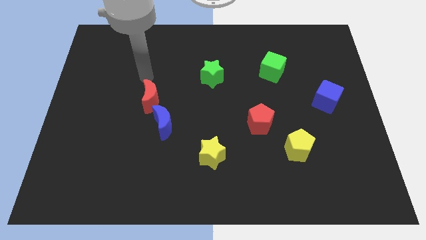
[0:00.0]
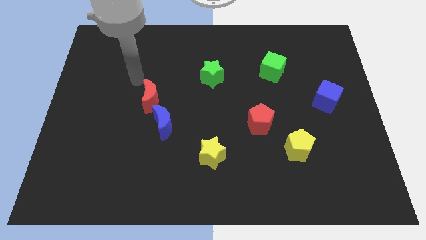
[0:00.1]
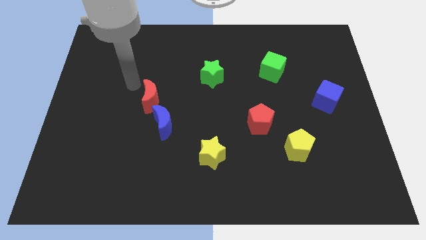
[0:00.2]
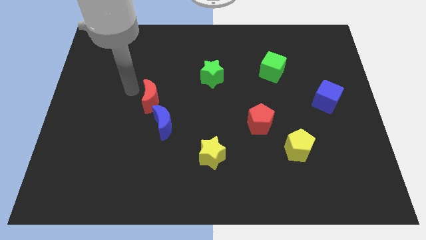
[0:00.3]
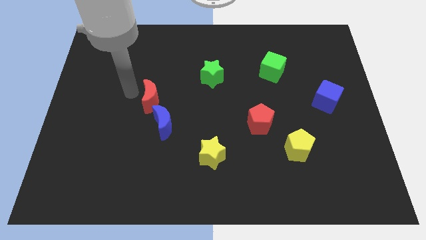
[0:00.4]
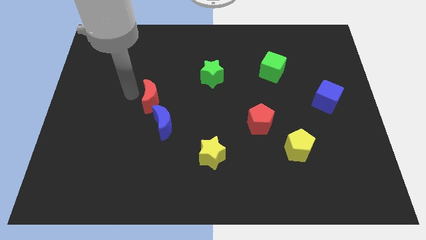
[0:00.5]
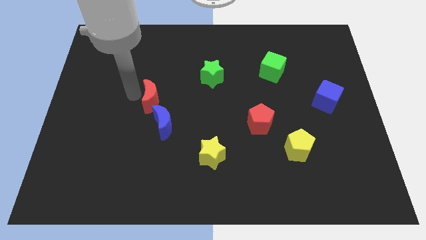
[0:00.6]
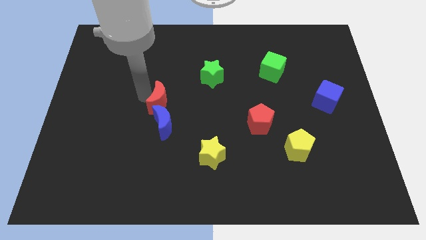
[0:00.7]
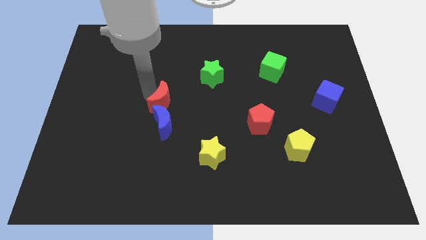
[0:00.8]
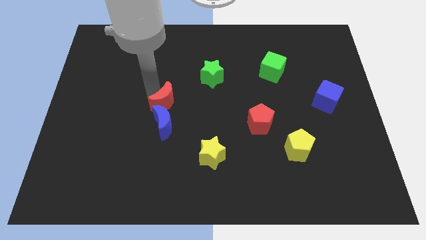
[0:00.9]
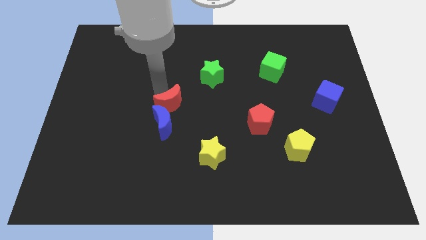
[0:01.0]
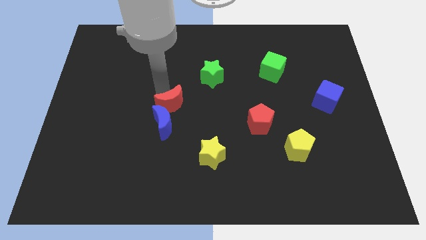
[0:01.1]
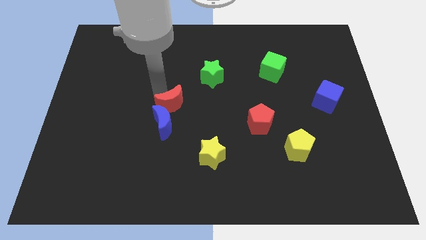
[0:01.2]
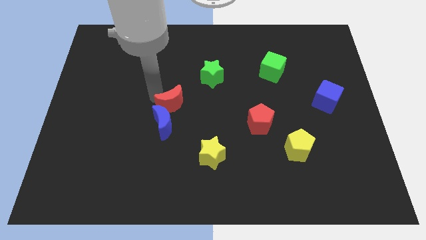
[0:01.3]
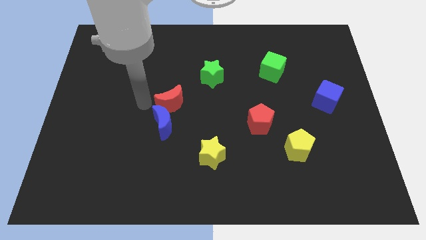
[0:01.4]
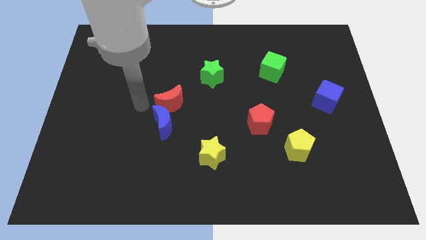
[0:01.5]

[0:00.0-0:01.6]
move the red moon slightly to the right

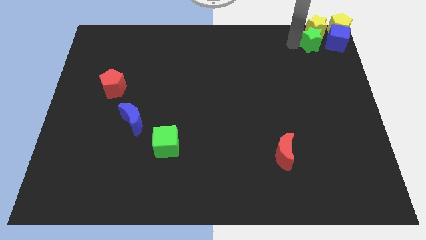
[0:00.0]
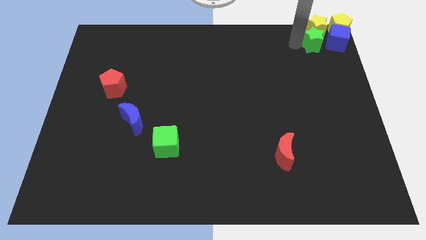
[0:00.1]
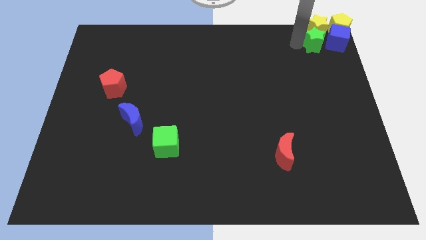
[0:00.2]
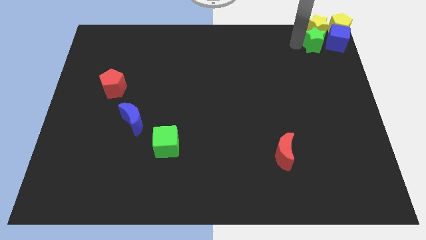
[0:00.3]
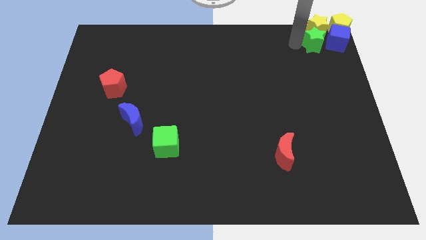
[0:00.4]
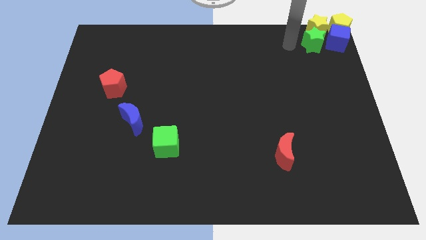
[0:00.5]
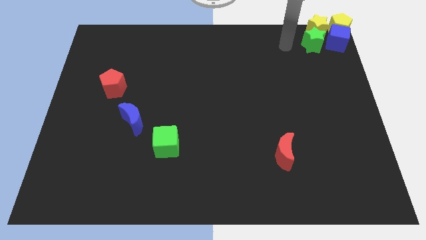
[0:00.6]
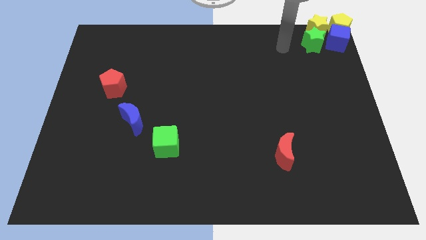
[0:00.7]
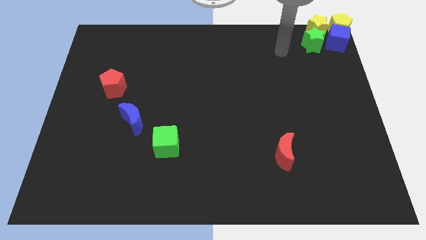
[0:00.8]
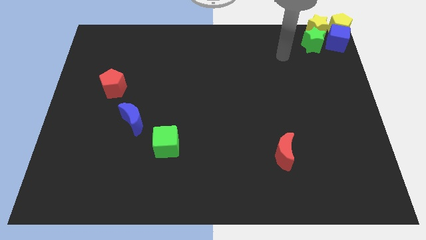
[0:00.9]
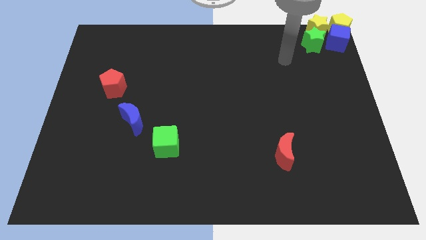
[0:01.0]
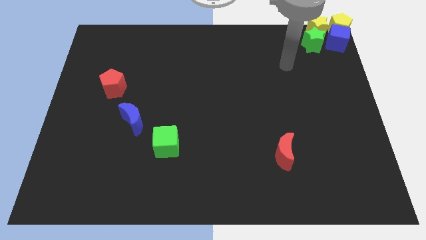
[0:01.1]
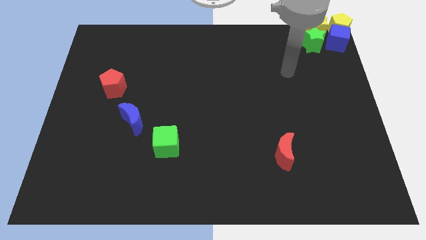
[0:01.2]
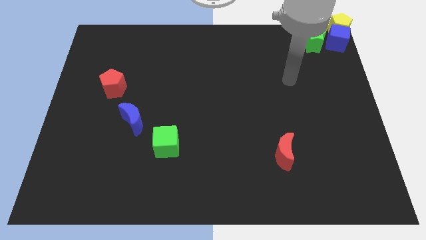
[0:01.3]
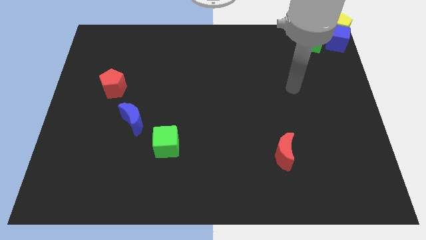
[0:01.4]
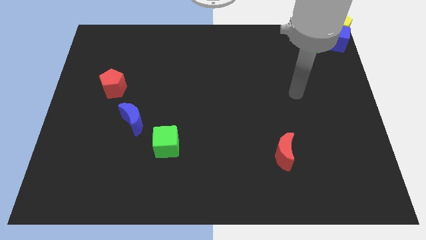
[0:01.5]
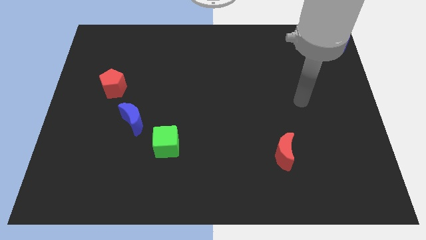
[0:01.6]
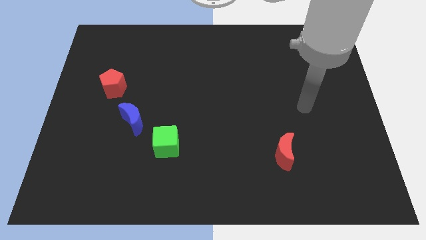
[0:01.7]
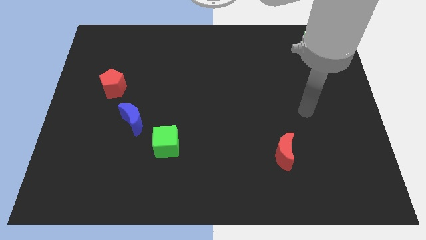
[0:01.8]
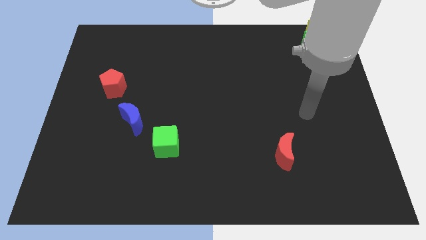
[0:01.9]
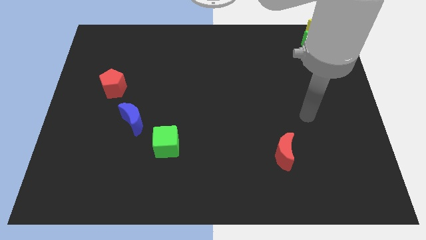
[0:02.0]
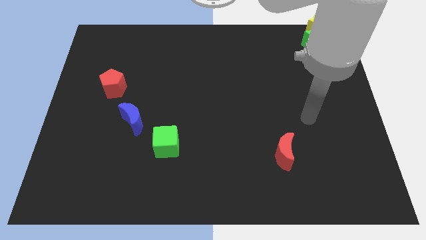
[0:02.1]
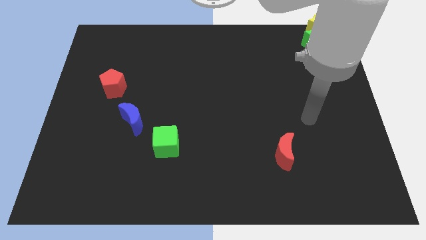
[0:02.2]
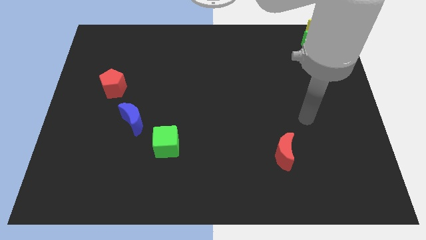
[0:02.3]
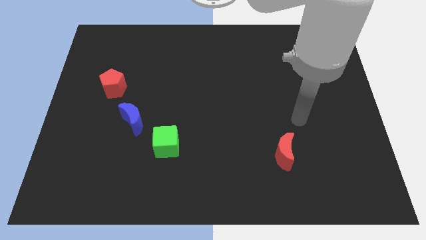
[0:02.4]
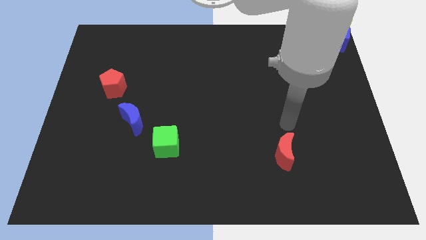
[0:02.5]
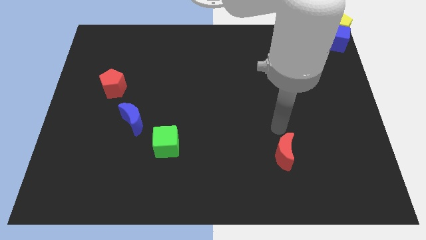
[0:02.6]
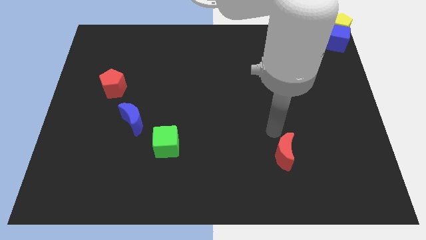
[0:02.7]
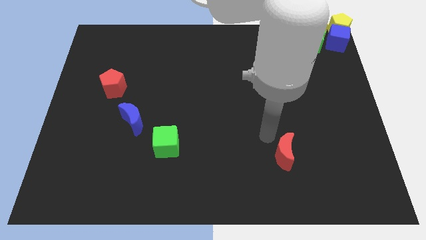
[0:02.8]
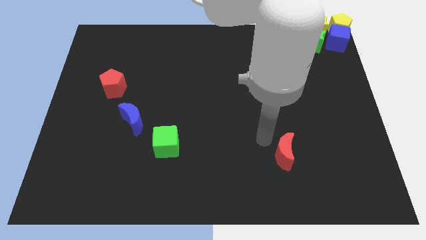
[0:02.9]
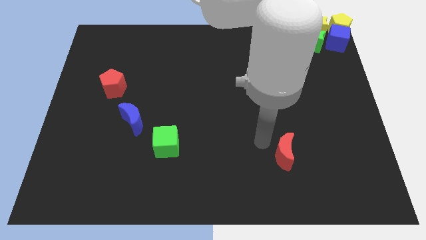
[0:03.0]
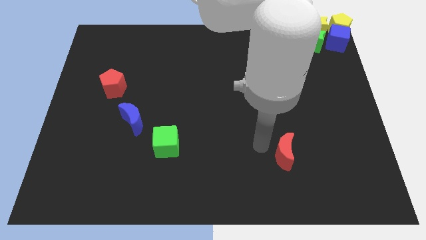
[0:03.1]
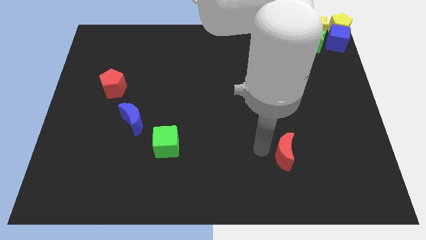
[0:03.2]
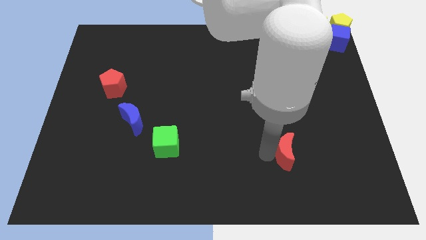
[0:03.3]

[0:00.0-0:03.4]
move the arm away from the green star

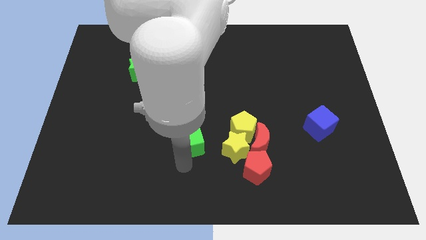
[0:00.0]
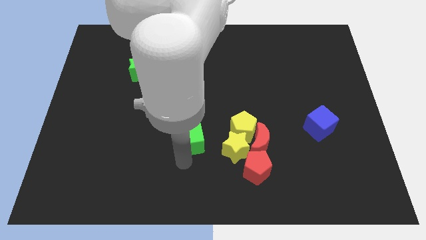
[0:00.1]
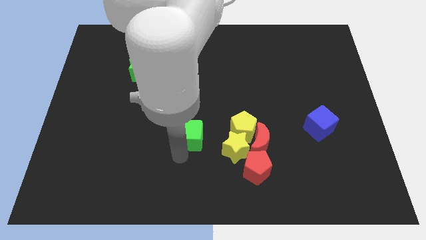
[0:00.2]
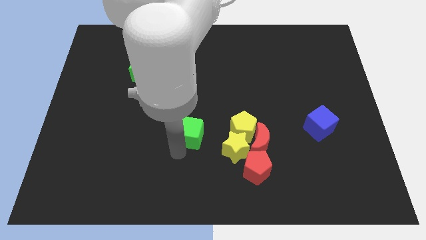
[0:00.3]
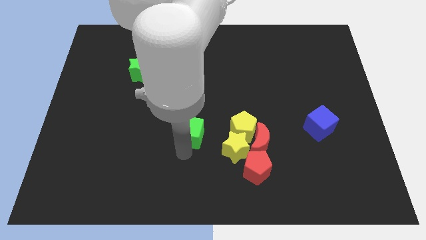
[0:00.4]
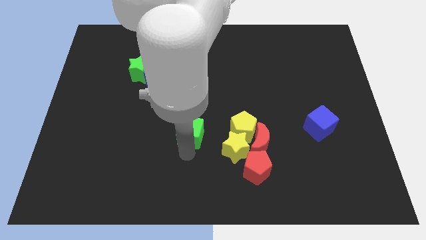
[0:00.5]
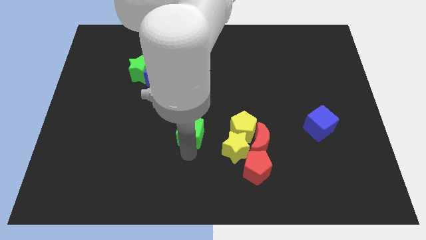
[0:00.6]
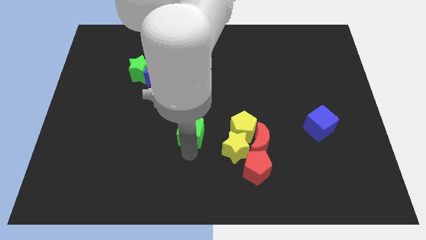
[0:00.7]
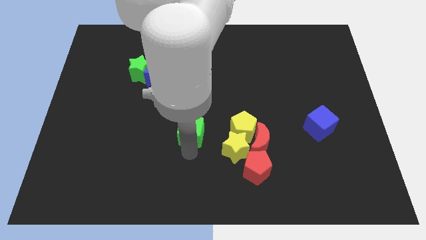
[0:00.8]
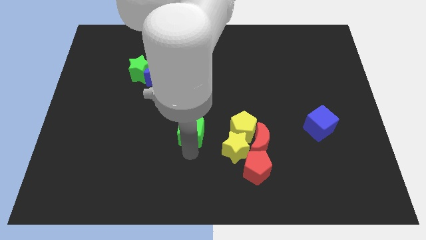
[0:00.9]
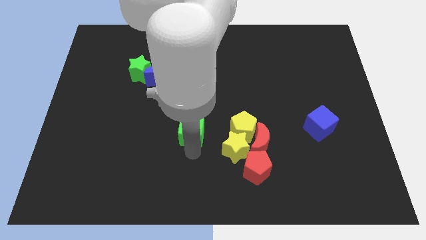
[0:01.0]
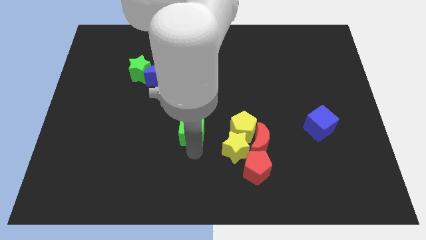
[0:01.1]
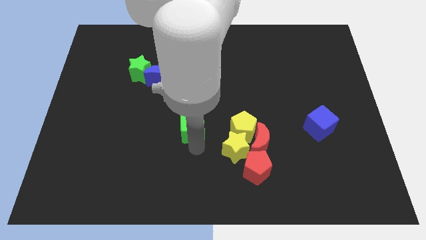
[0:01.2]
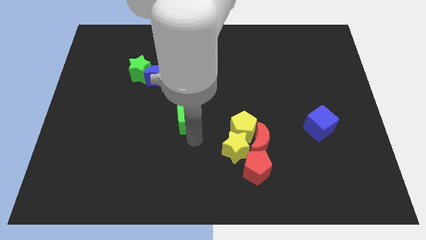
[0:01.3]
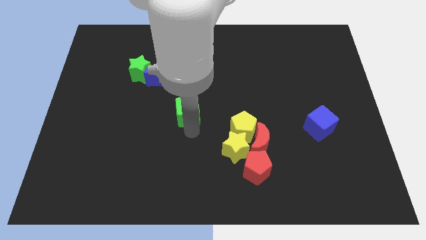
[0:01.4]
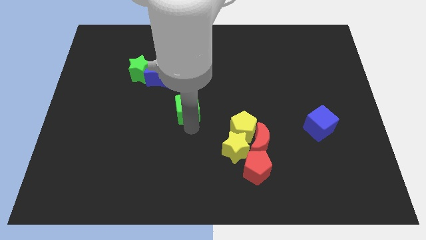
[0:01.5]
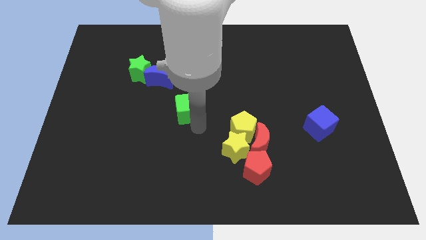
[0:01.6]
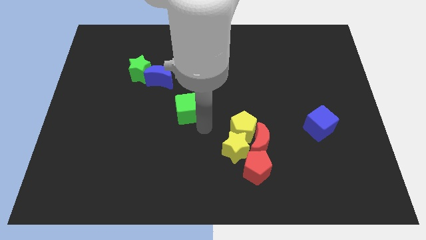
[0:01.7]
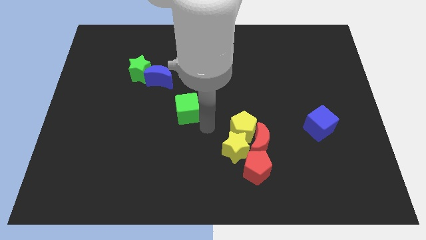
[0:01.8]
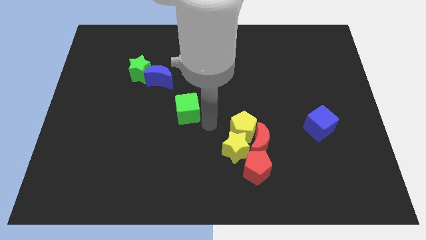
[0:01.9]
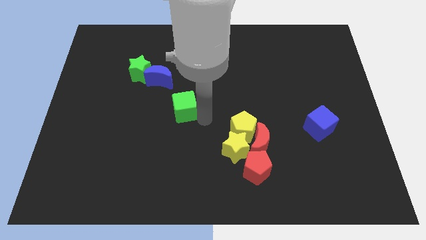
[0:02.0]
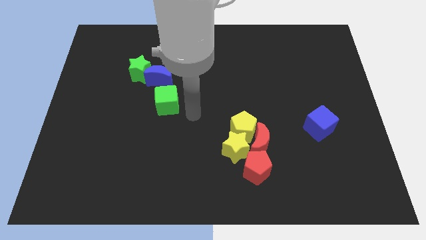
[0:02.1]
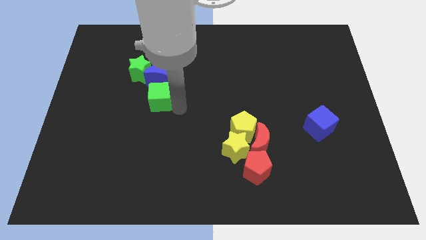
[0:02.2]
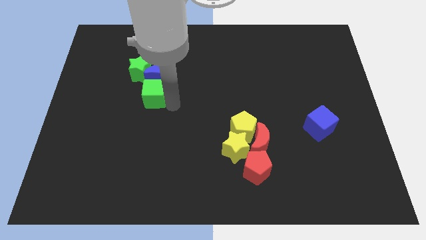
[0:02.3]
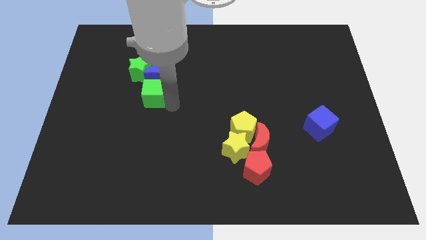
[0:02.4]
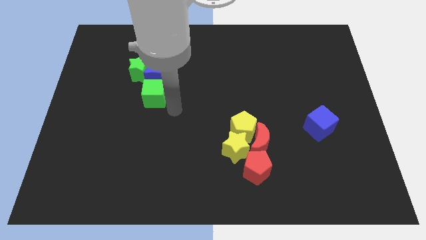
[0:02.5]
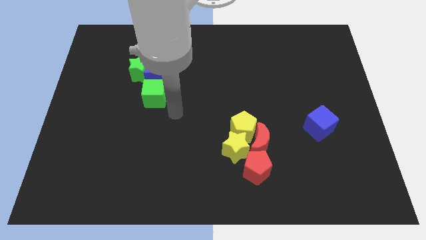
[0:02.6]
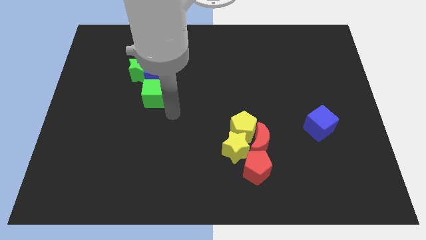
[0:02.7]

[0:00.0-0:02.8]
push the green cube below the blue moon

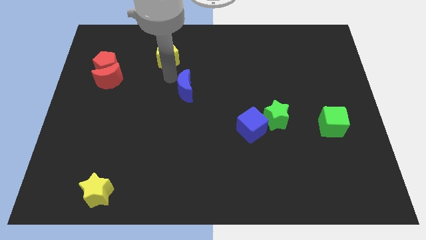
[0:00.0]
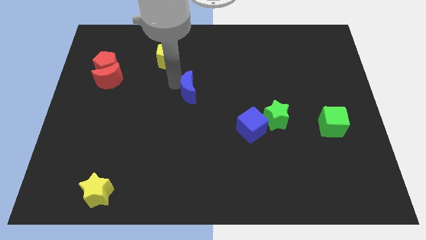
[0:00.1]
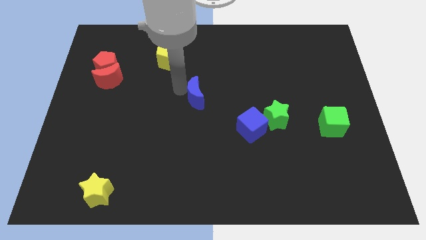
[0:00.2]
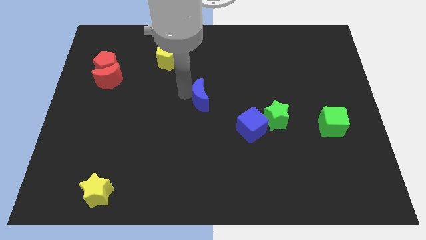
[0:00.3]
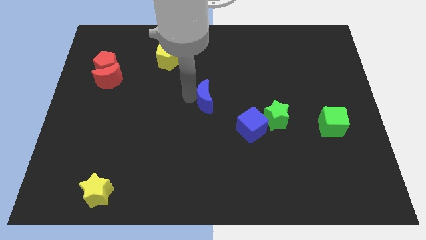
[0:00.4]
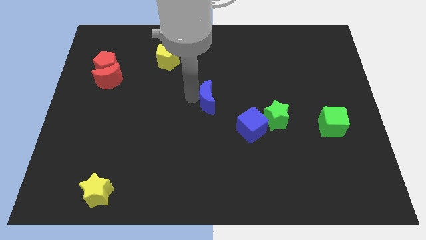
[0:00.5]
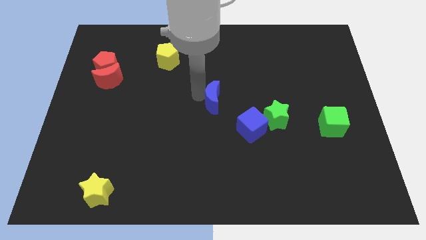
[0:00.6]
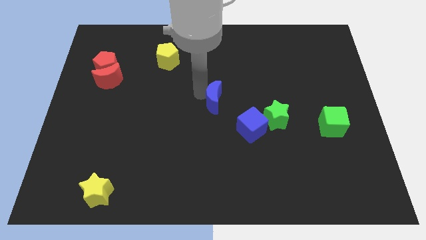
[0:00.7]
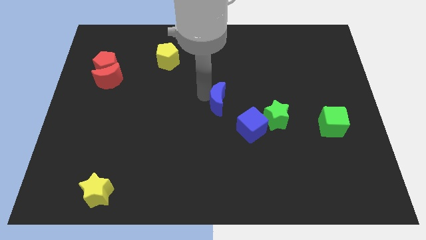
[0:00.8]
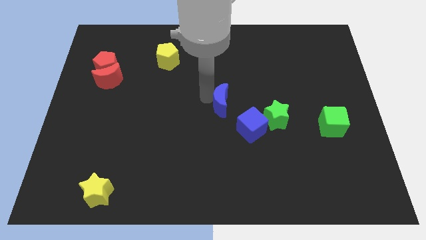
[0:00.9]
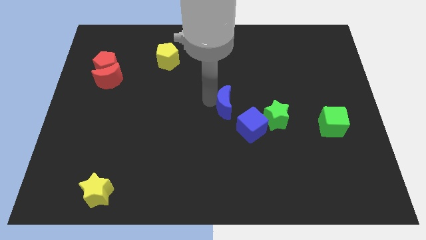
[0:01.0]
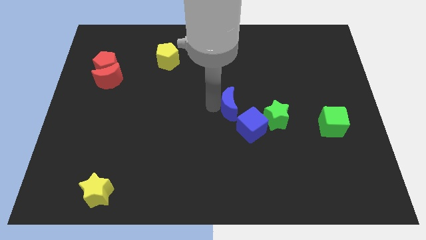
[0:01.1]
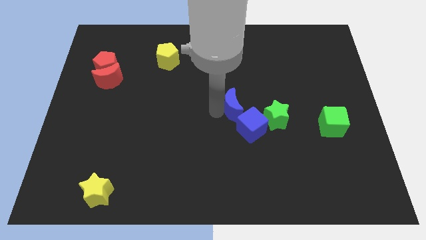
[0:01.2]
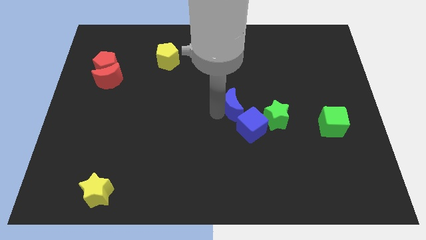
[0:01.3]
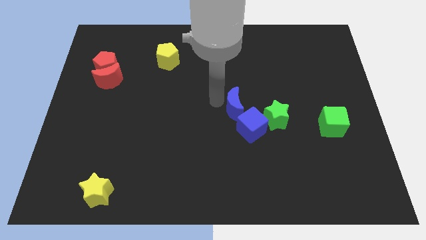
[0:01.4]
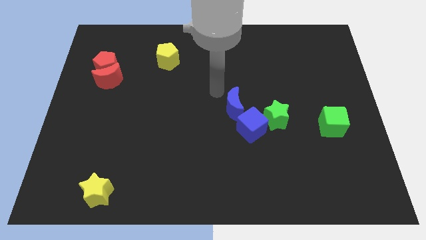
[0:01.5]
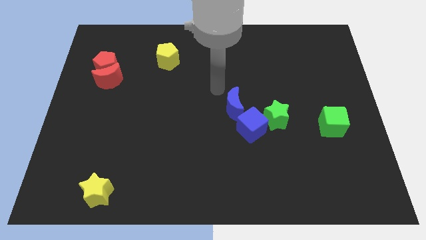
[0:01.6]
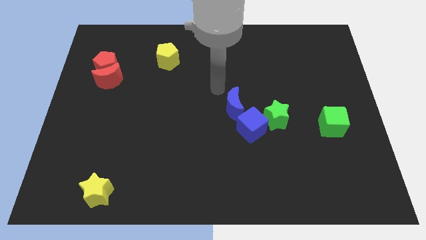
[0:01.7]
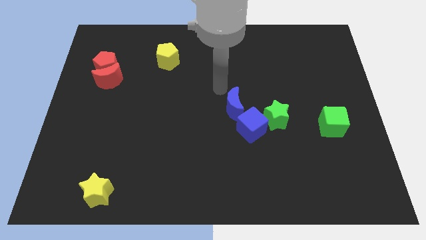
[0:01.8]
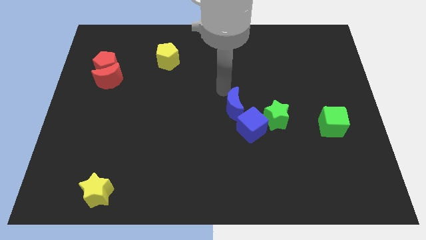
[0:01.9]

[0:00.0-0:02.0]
move the blue crescent towards the blue cube
